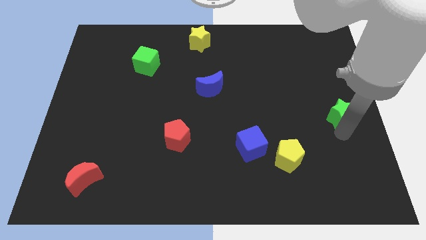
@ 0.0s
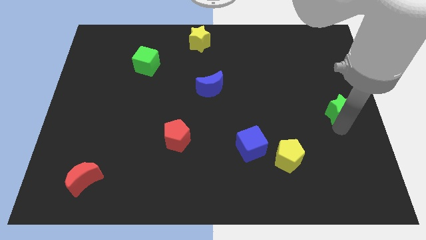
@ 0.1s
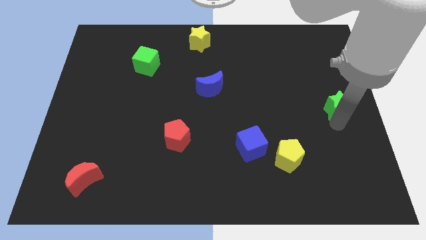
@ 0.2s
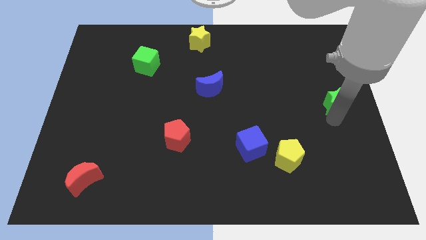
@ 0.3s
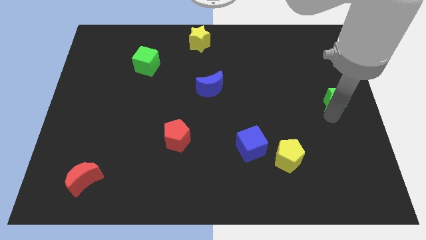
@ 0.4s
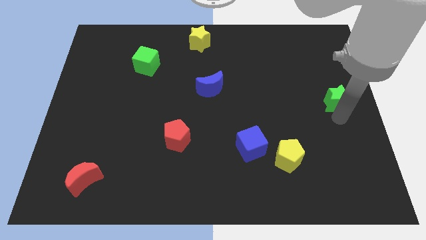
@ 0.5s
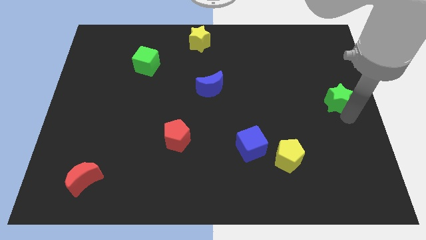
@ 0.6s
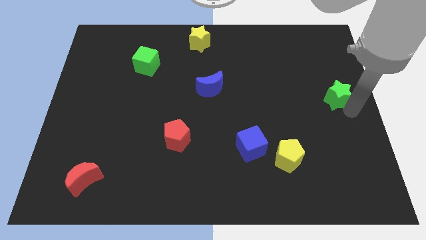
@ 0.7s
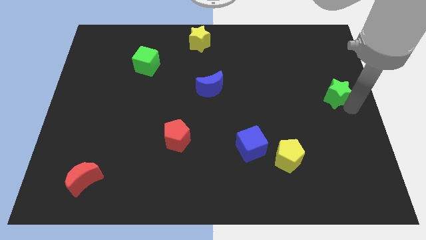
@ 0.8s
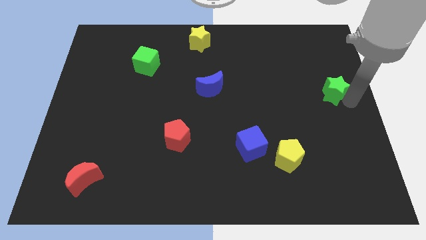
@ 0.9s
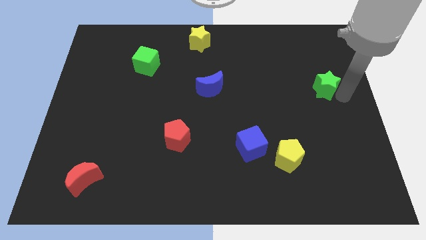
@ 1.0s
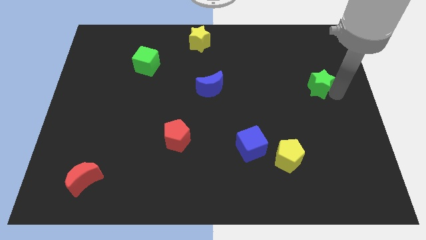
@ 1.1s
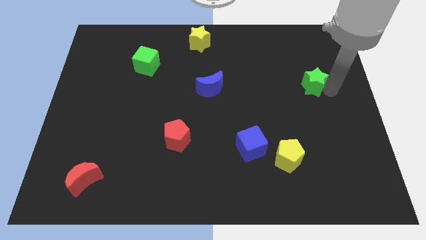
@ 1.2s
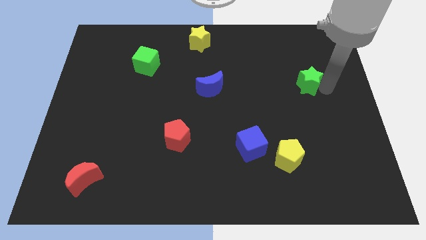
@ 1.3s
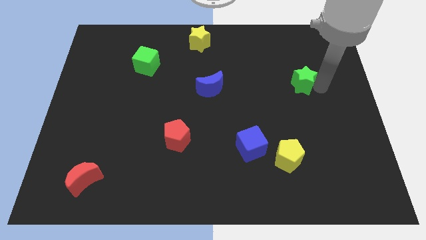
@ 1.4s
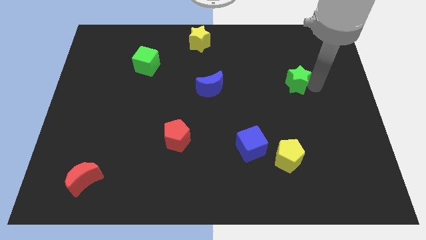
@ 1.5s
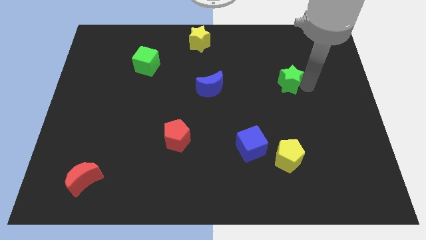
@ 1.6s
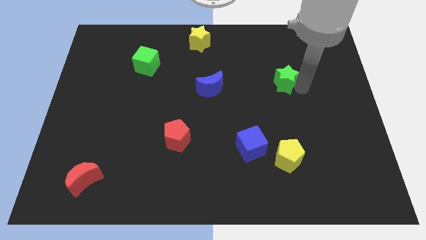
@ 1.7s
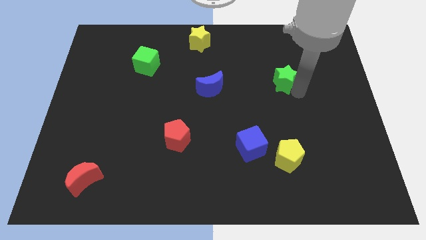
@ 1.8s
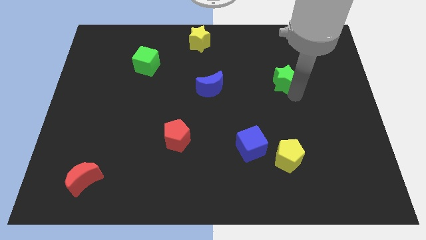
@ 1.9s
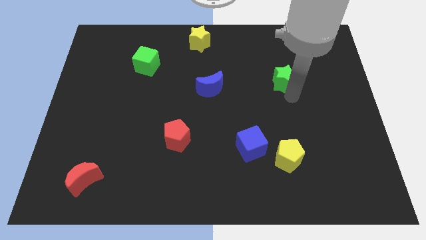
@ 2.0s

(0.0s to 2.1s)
push green star parallel to blue moon

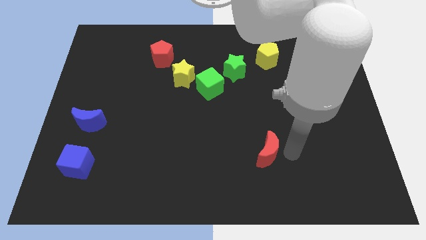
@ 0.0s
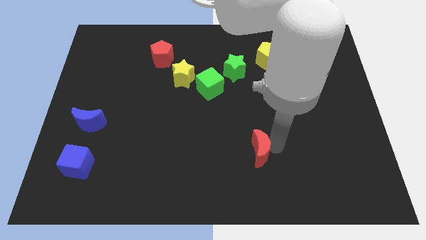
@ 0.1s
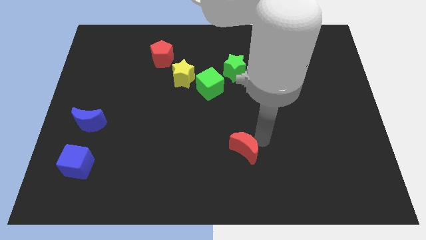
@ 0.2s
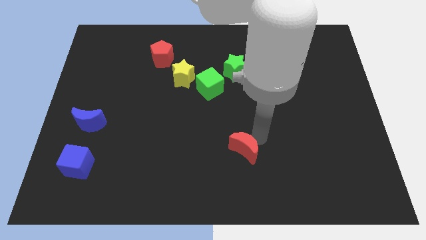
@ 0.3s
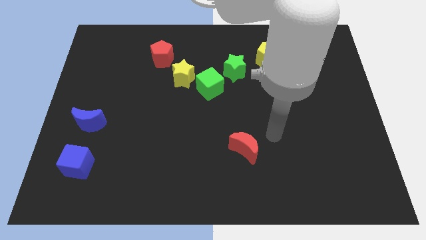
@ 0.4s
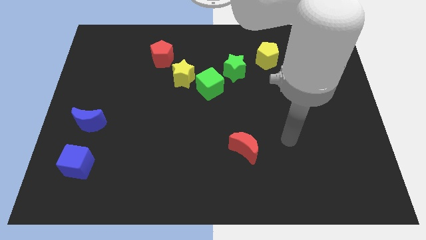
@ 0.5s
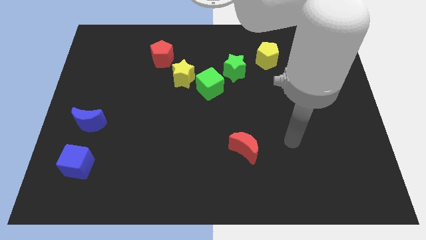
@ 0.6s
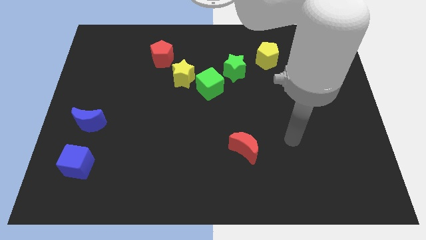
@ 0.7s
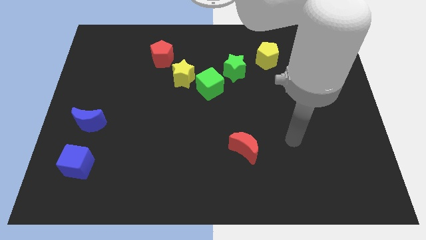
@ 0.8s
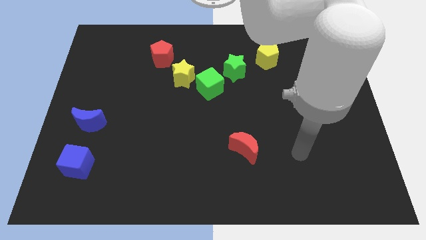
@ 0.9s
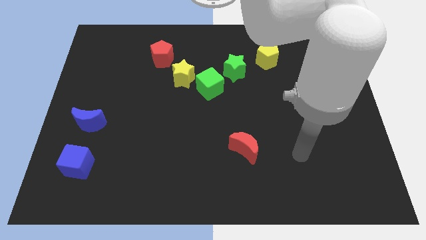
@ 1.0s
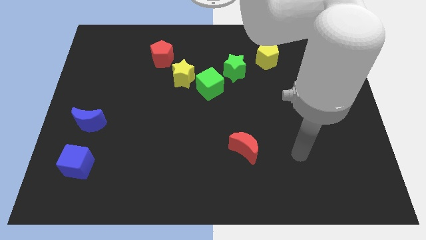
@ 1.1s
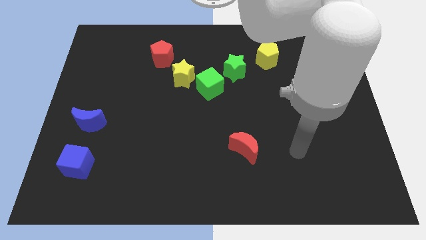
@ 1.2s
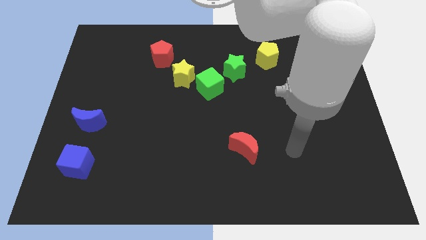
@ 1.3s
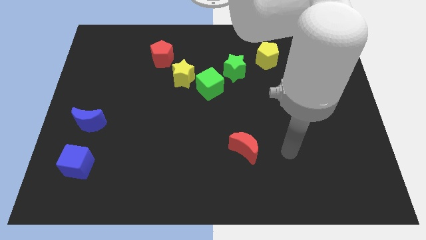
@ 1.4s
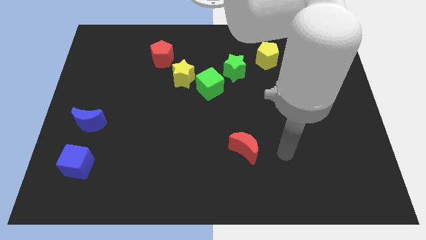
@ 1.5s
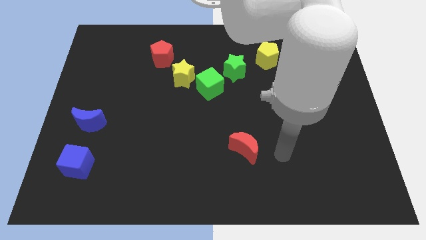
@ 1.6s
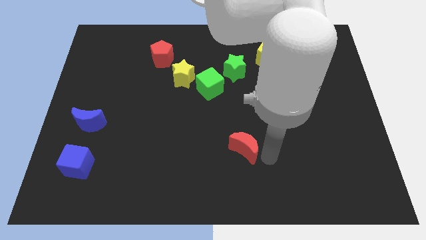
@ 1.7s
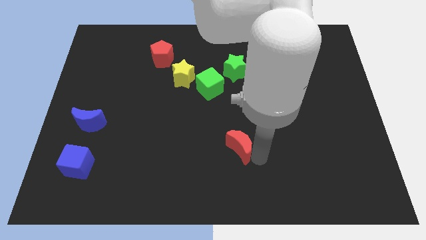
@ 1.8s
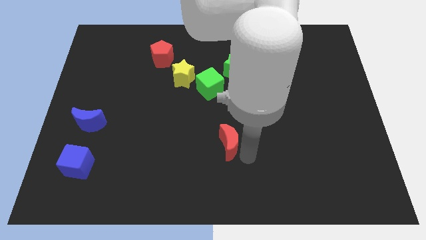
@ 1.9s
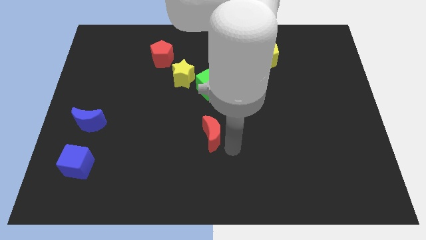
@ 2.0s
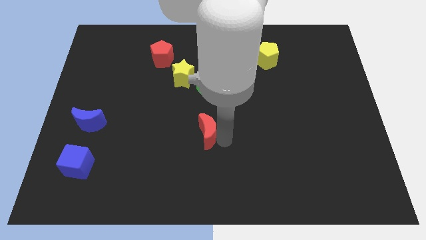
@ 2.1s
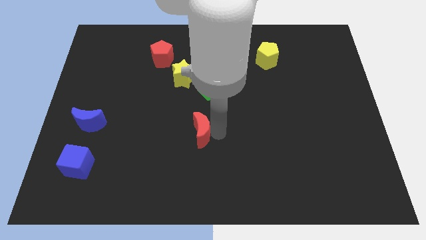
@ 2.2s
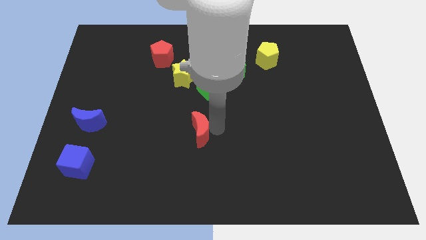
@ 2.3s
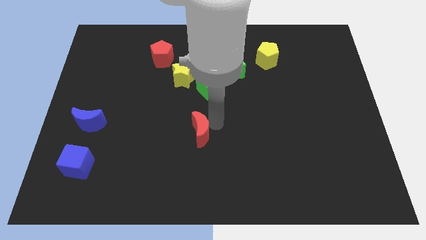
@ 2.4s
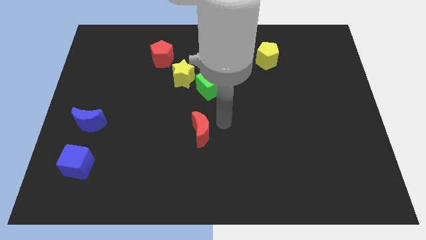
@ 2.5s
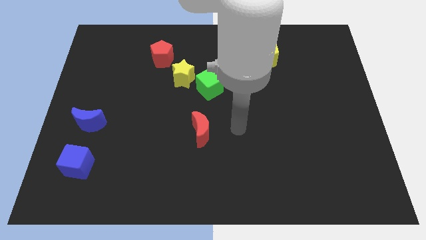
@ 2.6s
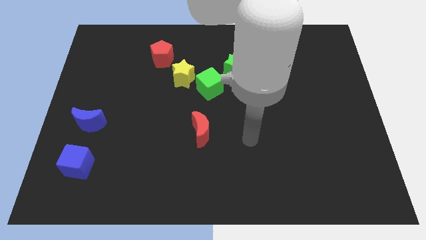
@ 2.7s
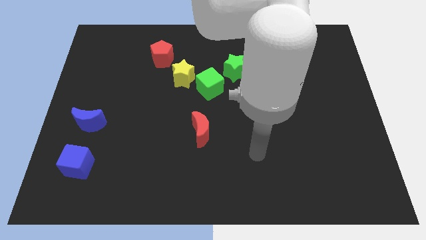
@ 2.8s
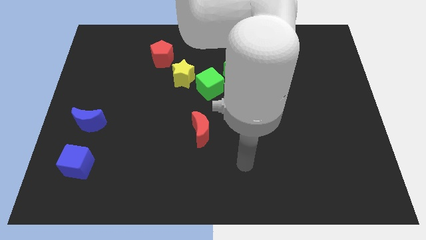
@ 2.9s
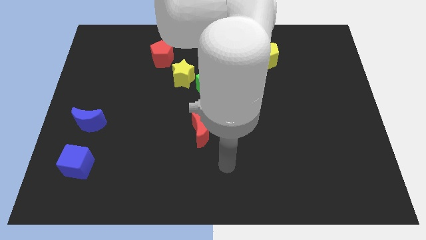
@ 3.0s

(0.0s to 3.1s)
move the red crescent to the bottom of the green cube

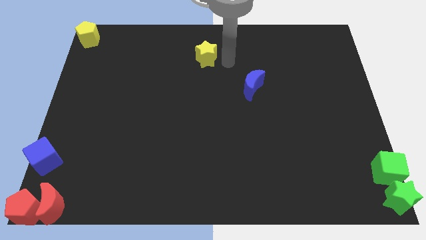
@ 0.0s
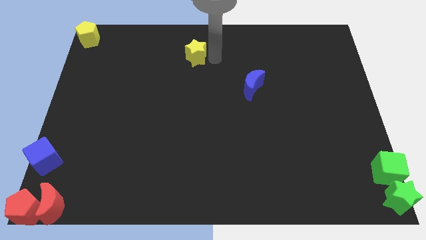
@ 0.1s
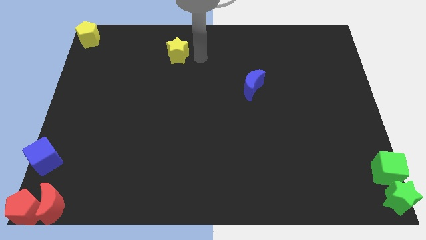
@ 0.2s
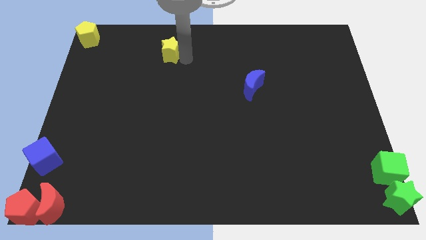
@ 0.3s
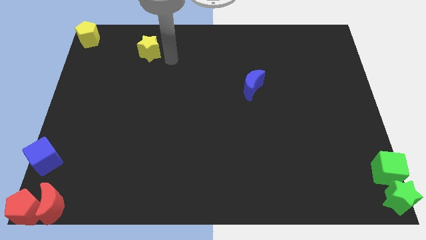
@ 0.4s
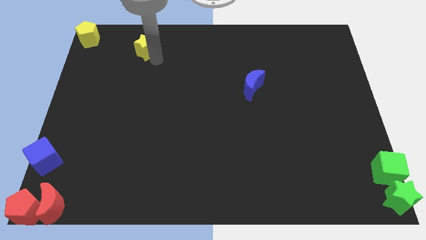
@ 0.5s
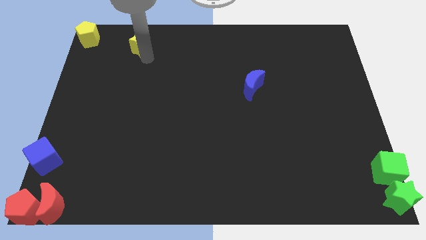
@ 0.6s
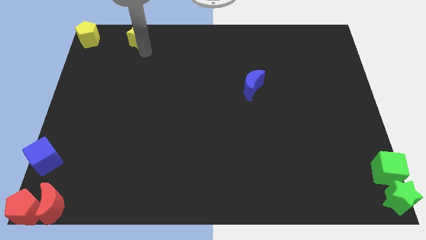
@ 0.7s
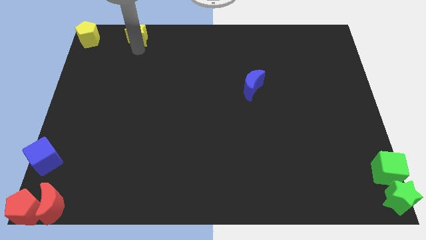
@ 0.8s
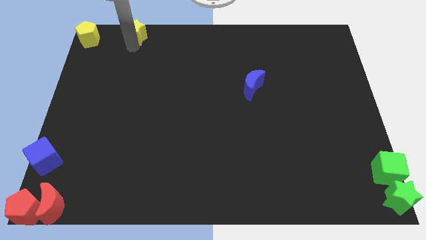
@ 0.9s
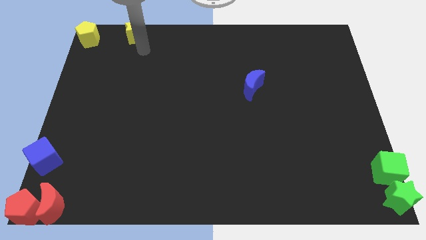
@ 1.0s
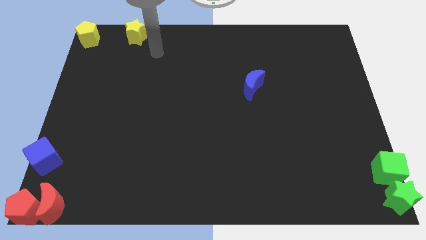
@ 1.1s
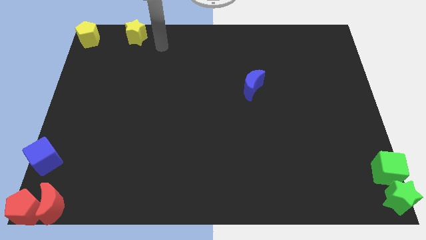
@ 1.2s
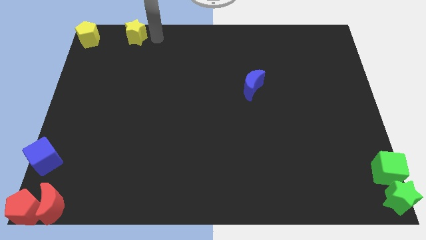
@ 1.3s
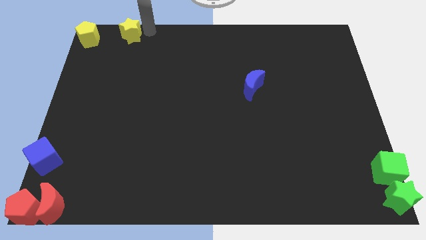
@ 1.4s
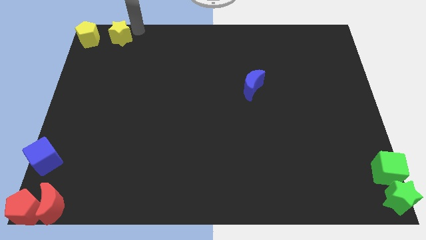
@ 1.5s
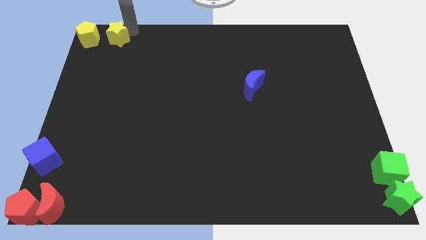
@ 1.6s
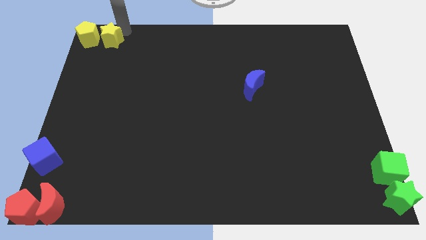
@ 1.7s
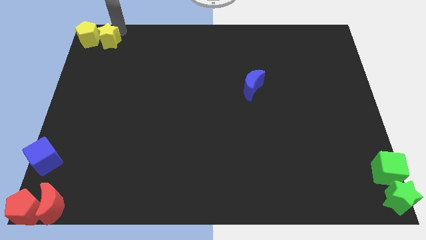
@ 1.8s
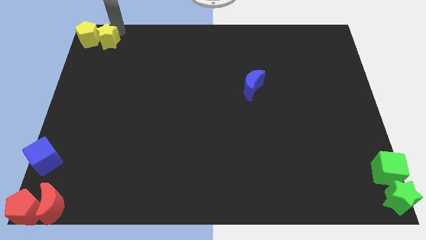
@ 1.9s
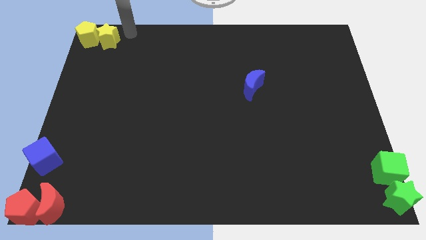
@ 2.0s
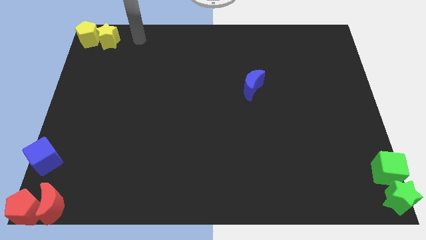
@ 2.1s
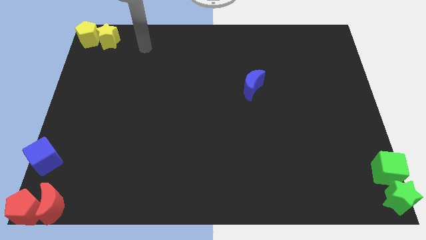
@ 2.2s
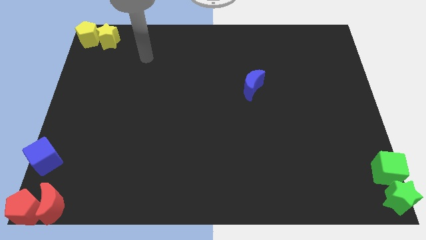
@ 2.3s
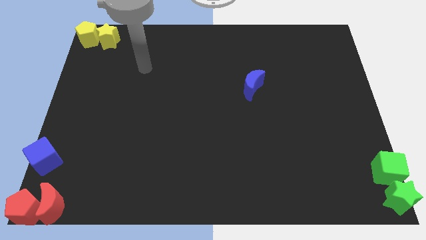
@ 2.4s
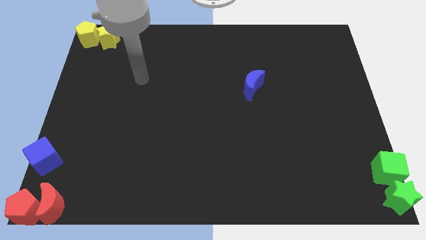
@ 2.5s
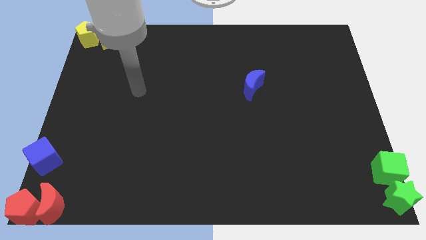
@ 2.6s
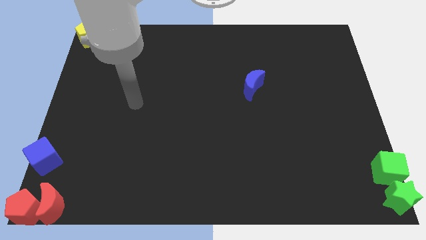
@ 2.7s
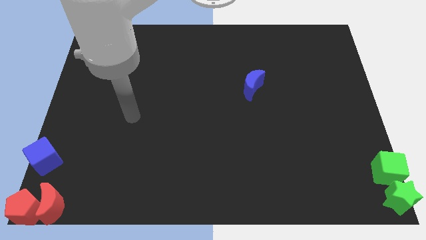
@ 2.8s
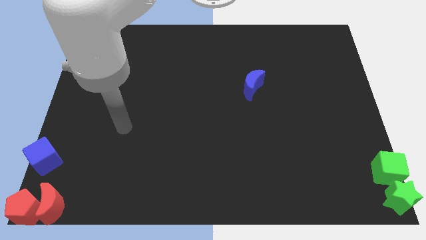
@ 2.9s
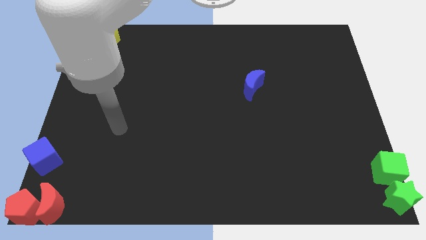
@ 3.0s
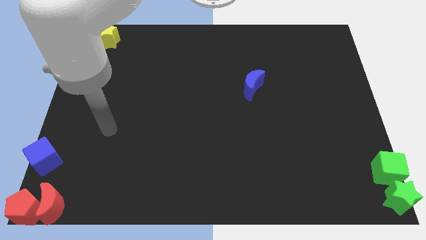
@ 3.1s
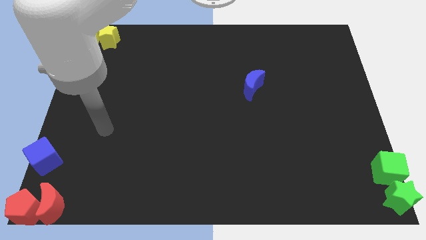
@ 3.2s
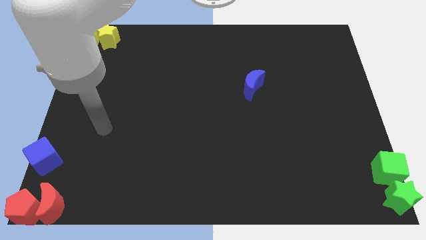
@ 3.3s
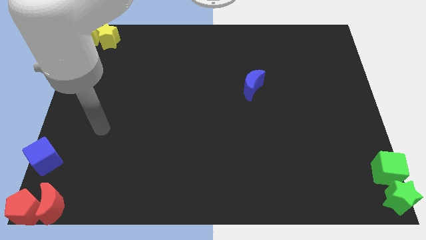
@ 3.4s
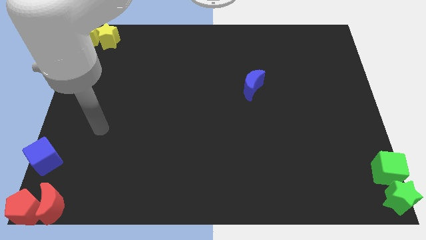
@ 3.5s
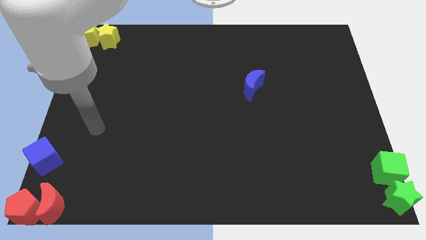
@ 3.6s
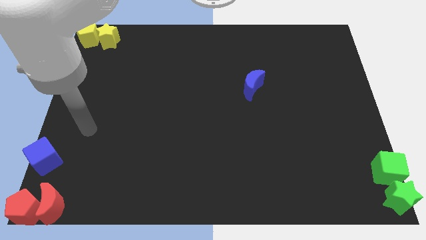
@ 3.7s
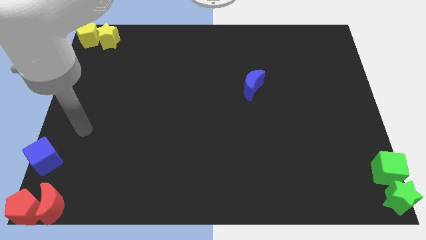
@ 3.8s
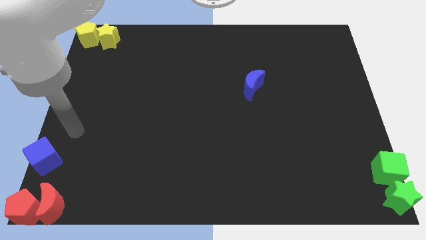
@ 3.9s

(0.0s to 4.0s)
push the yellow star to the right of the yellow pentagon
